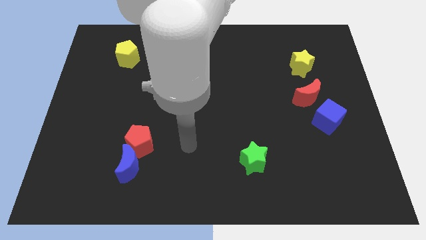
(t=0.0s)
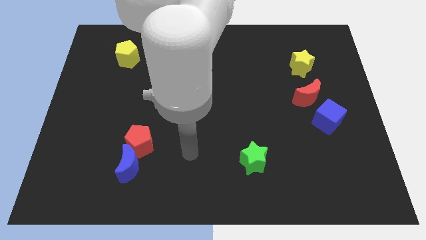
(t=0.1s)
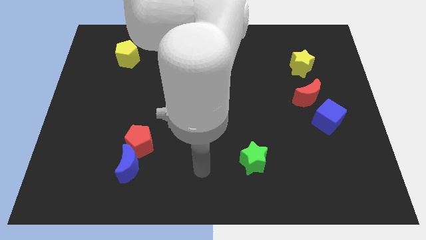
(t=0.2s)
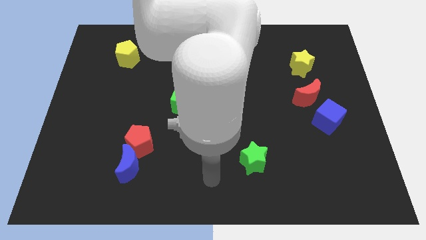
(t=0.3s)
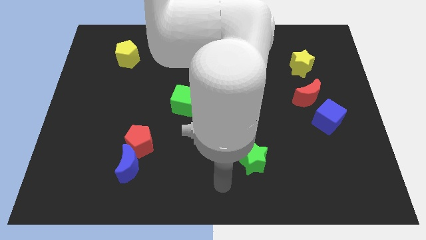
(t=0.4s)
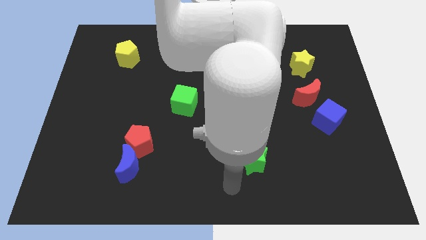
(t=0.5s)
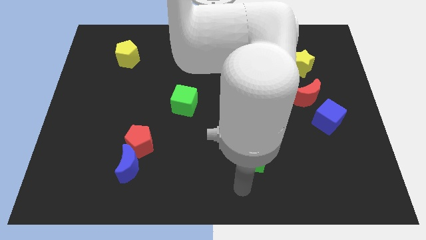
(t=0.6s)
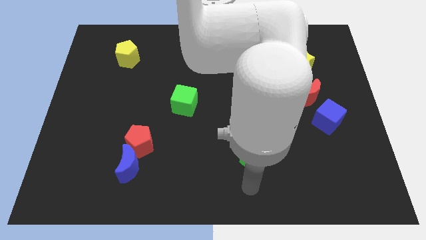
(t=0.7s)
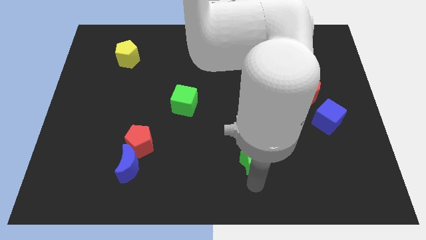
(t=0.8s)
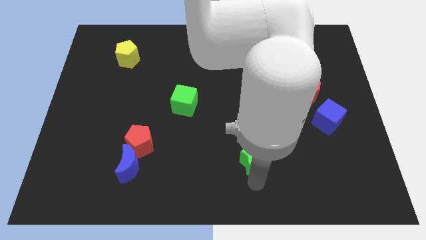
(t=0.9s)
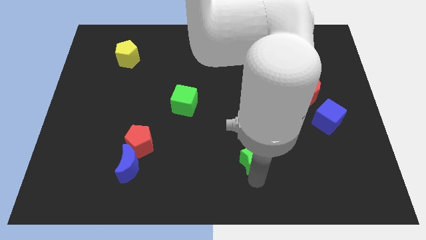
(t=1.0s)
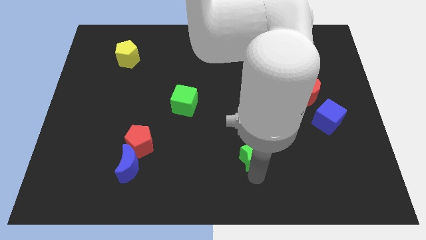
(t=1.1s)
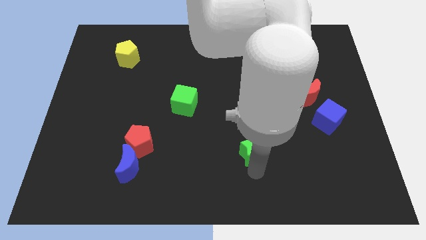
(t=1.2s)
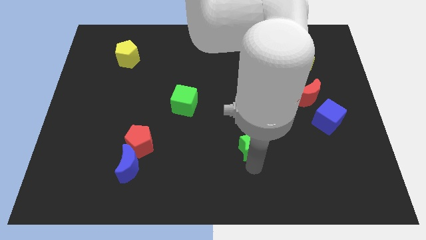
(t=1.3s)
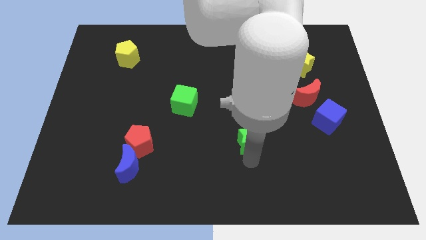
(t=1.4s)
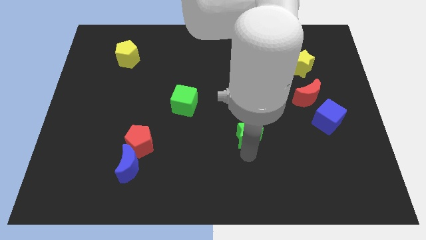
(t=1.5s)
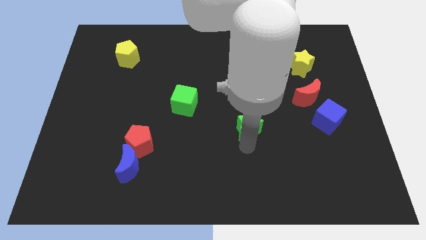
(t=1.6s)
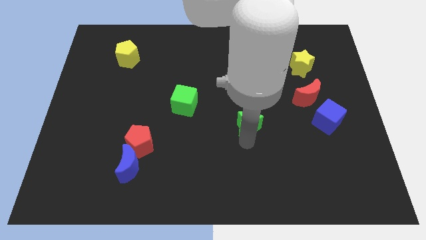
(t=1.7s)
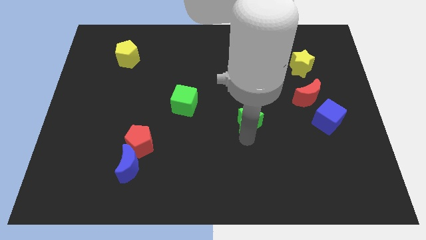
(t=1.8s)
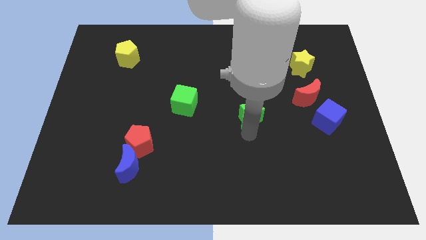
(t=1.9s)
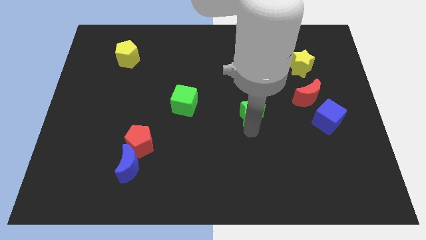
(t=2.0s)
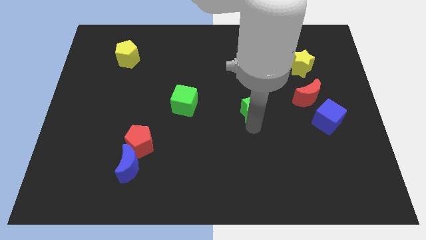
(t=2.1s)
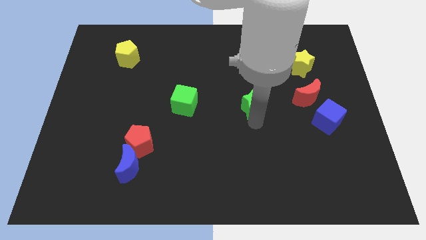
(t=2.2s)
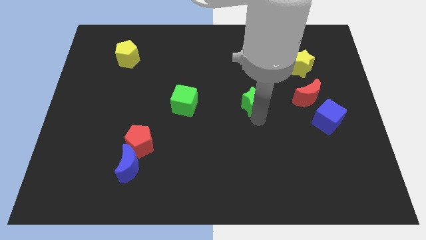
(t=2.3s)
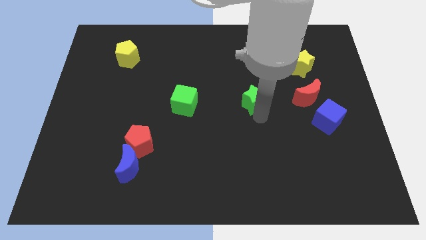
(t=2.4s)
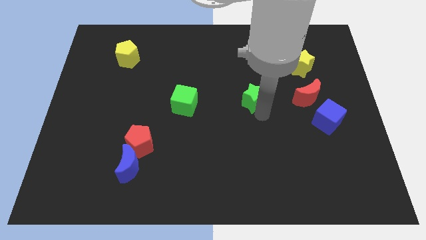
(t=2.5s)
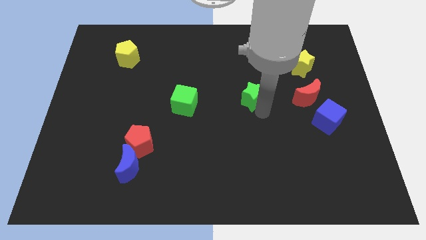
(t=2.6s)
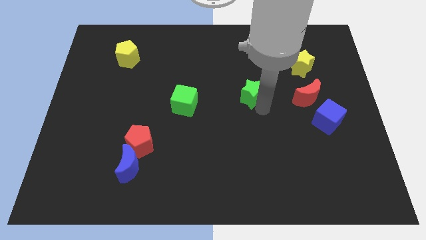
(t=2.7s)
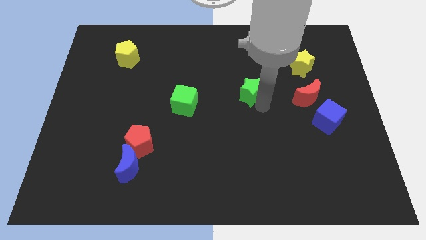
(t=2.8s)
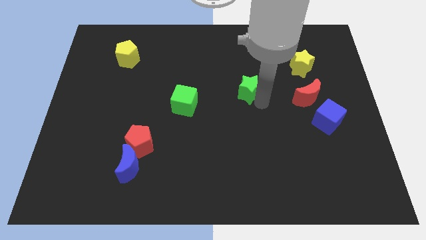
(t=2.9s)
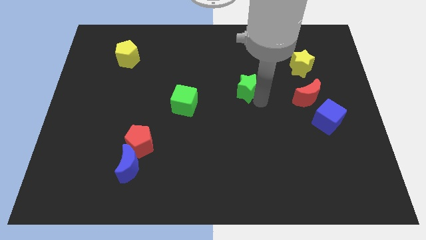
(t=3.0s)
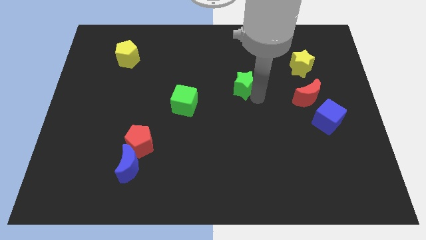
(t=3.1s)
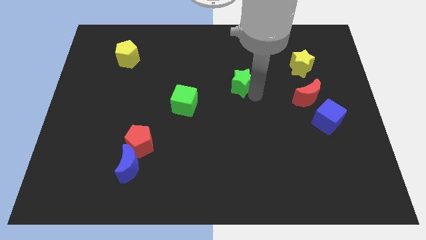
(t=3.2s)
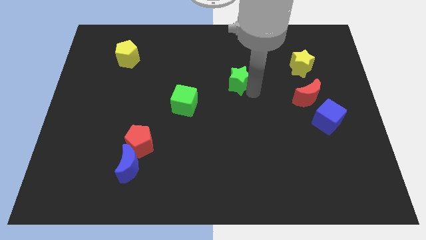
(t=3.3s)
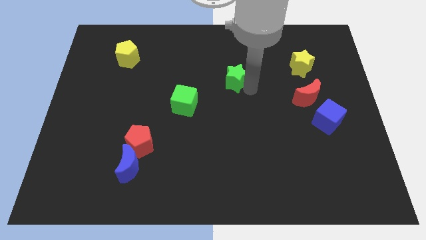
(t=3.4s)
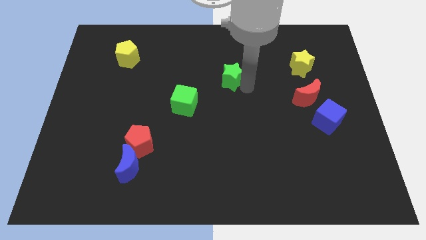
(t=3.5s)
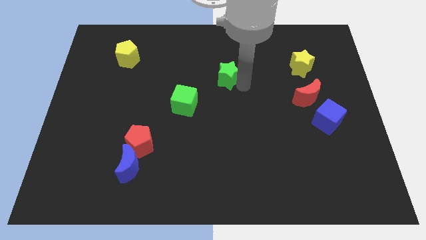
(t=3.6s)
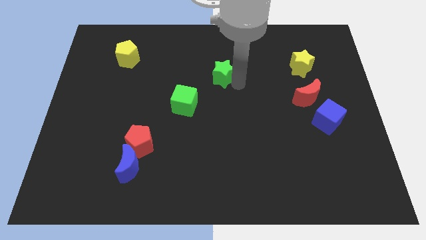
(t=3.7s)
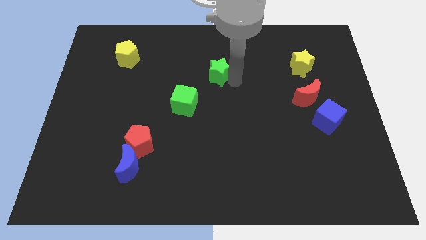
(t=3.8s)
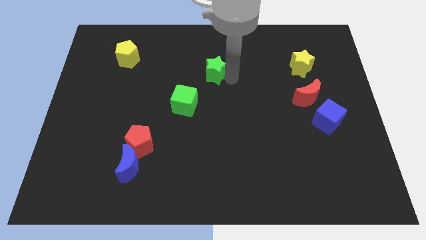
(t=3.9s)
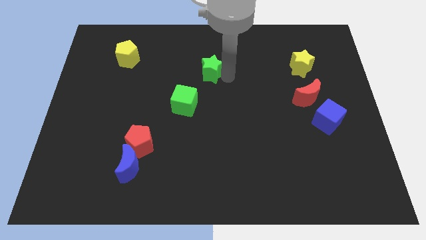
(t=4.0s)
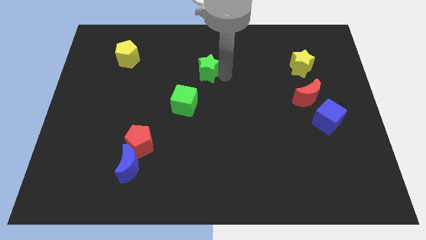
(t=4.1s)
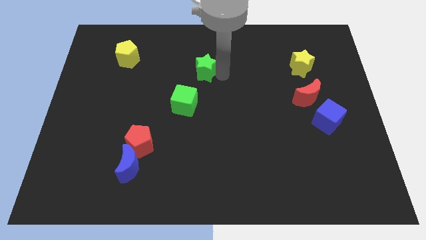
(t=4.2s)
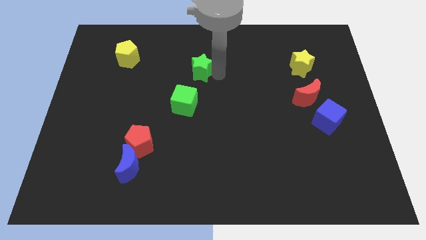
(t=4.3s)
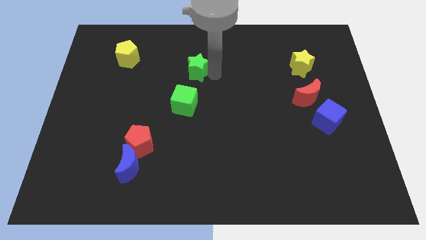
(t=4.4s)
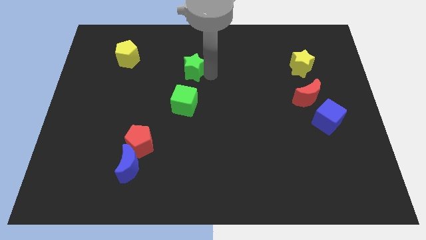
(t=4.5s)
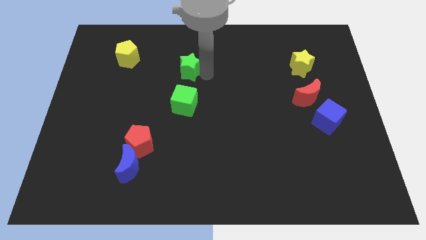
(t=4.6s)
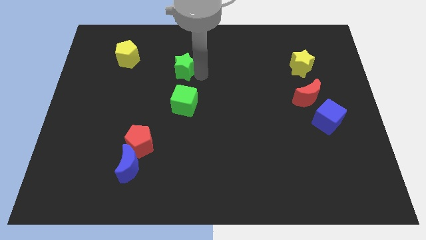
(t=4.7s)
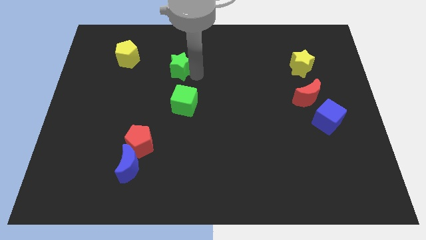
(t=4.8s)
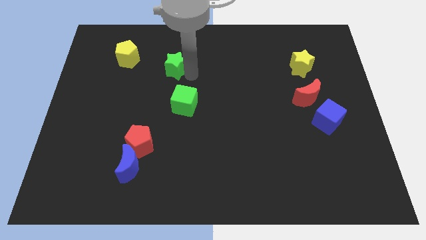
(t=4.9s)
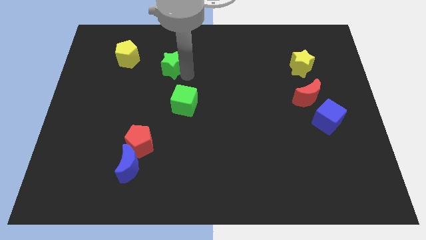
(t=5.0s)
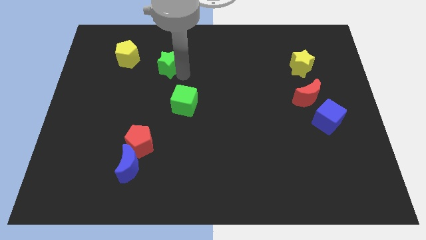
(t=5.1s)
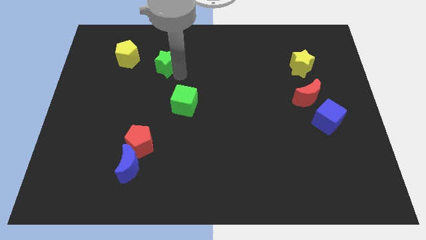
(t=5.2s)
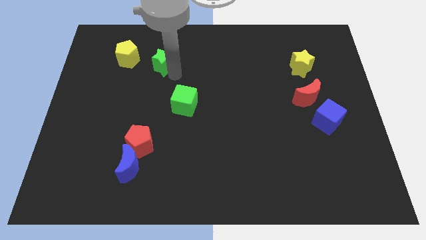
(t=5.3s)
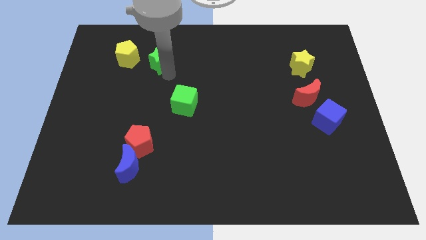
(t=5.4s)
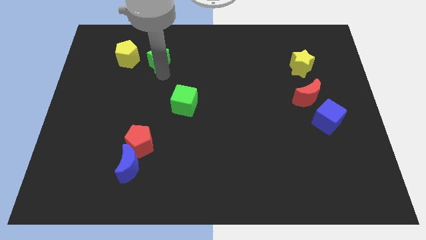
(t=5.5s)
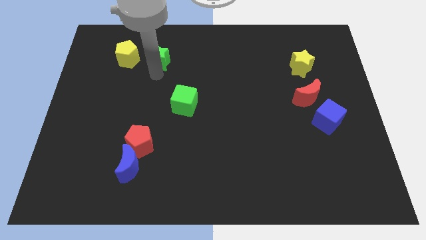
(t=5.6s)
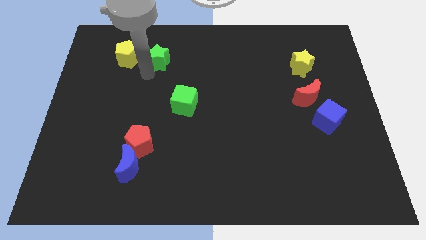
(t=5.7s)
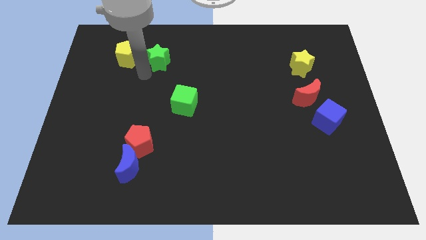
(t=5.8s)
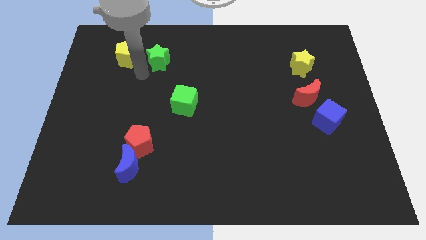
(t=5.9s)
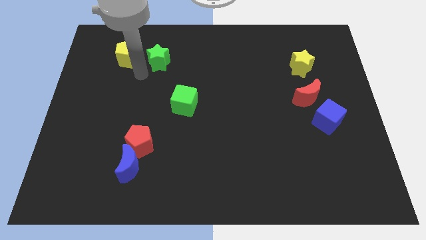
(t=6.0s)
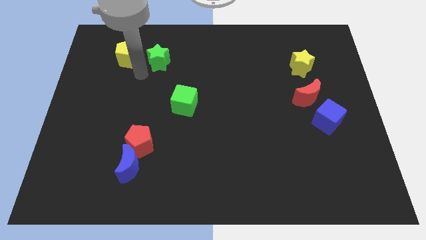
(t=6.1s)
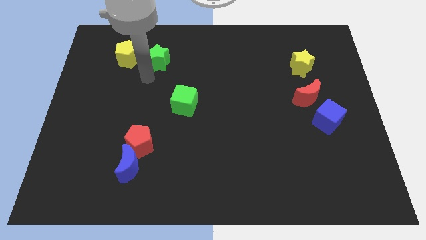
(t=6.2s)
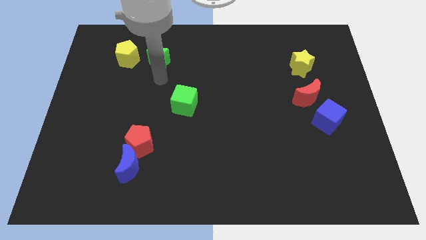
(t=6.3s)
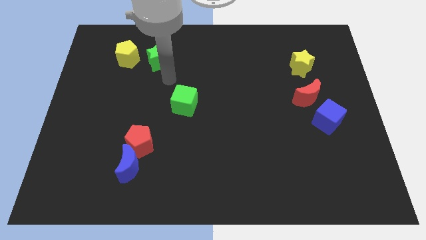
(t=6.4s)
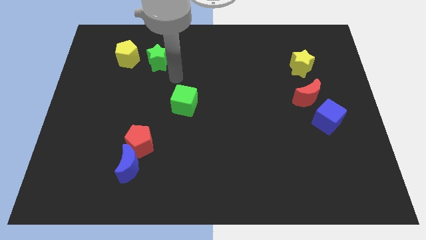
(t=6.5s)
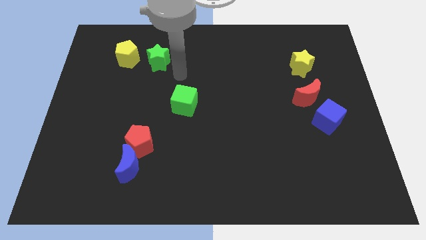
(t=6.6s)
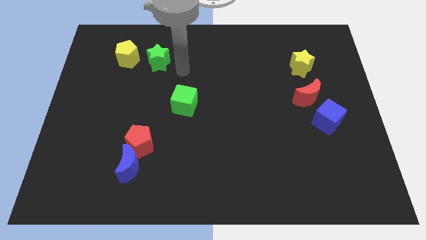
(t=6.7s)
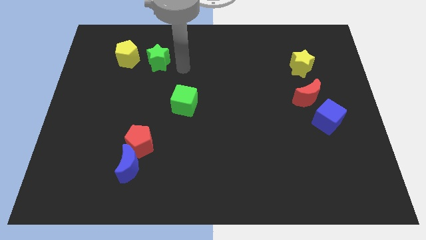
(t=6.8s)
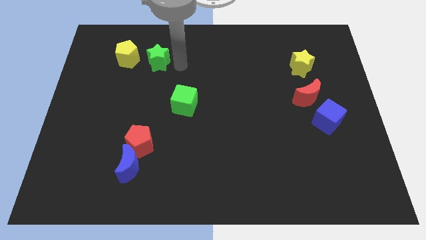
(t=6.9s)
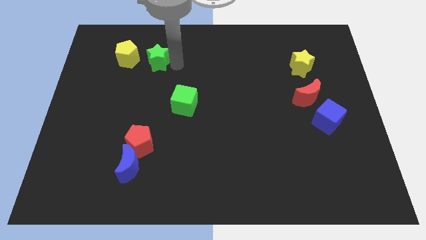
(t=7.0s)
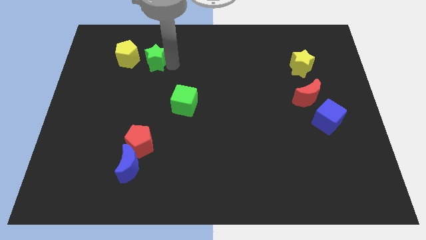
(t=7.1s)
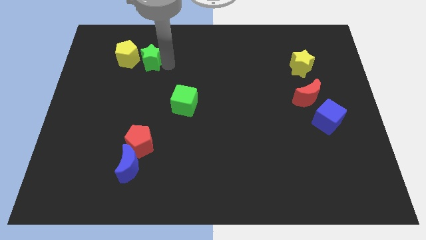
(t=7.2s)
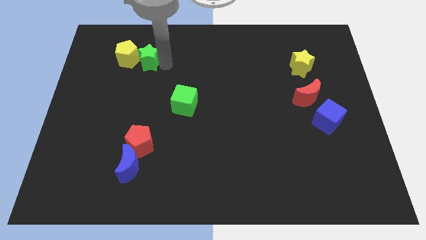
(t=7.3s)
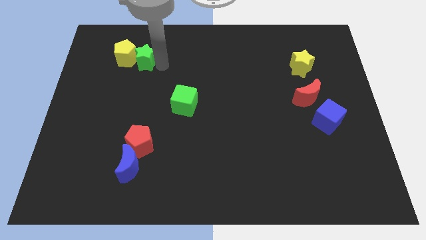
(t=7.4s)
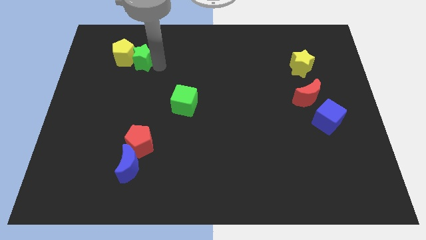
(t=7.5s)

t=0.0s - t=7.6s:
slide the green star next to the yellow pentagon

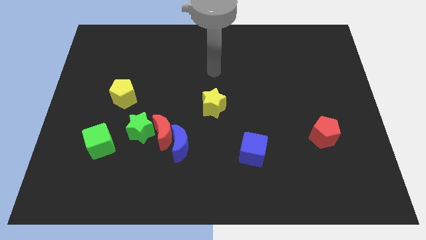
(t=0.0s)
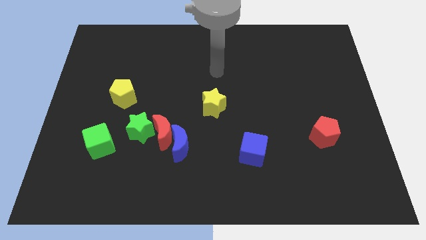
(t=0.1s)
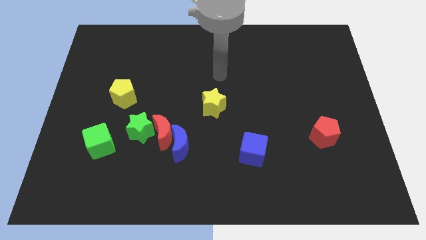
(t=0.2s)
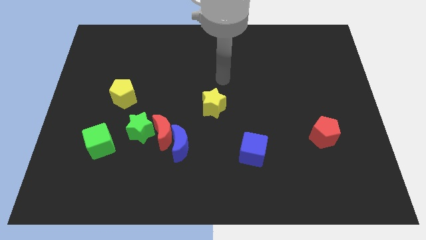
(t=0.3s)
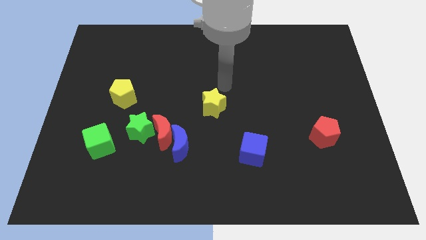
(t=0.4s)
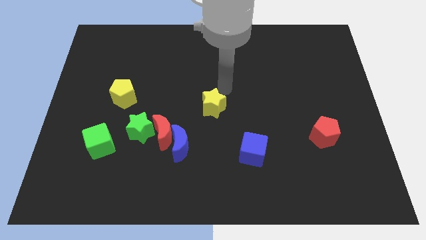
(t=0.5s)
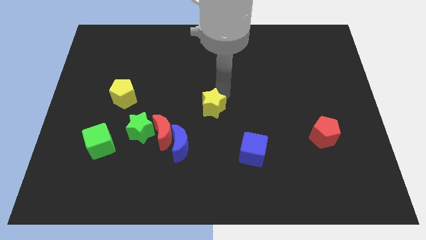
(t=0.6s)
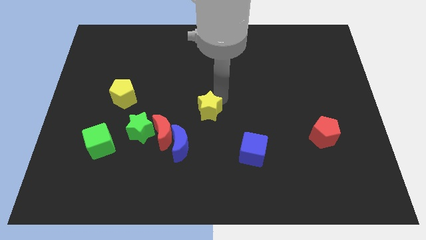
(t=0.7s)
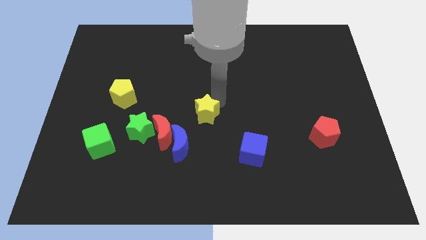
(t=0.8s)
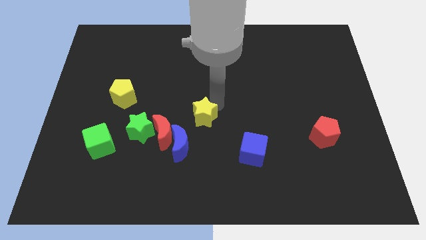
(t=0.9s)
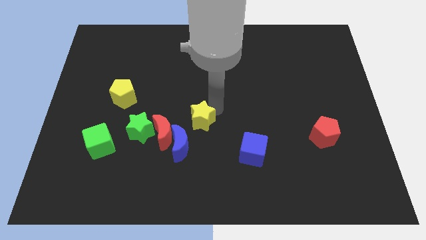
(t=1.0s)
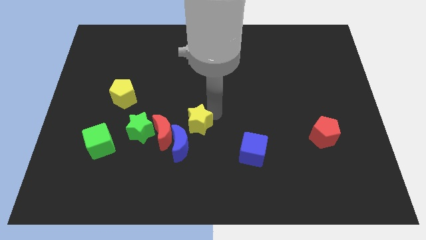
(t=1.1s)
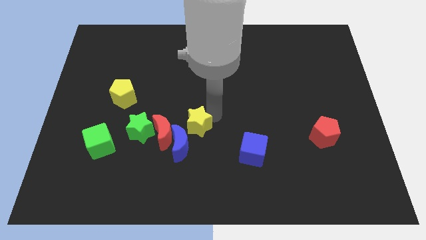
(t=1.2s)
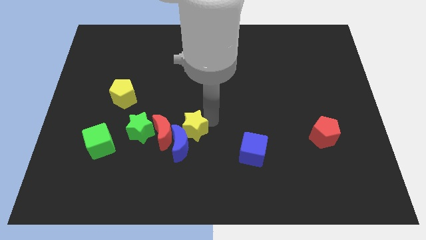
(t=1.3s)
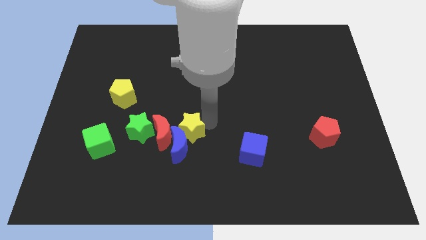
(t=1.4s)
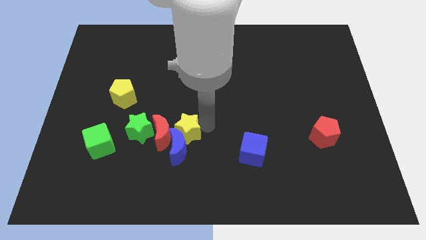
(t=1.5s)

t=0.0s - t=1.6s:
put the yellow star next to the blue moon
